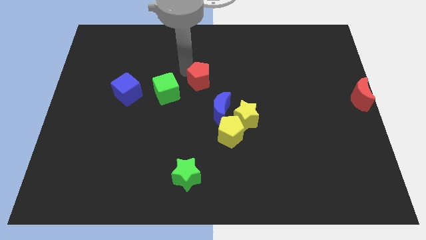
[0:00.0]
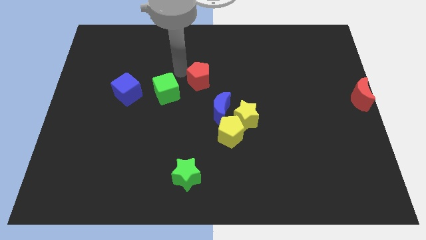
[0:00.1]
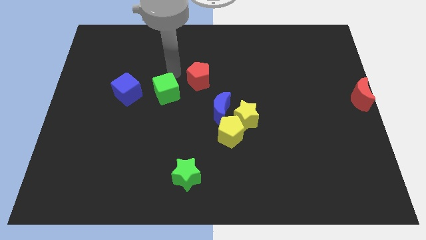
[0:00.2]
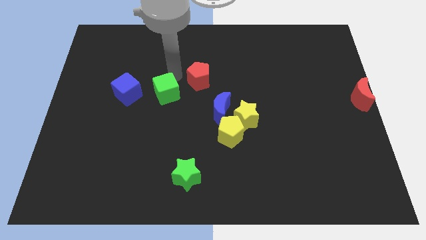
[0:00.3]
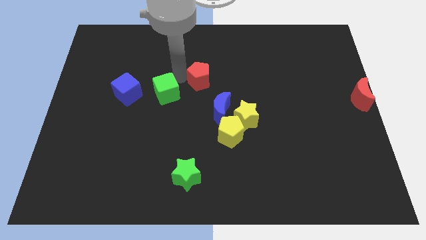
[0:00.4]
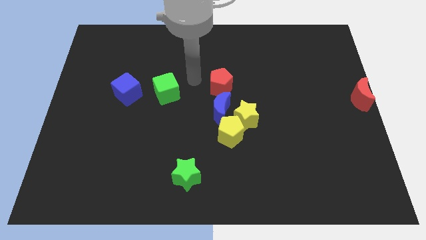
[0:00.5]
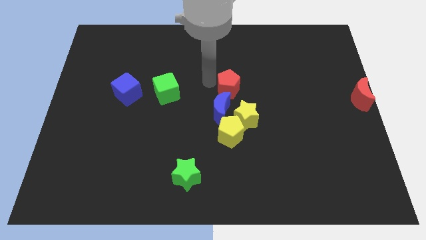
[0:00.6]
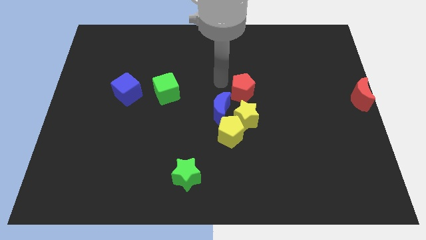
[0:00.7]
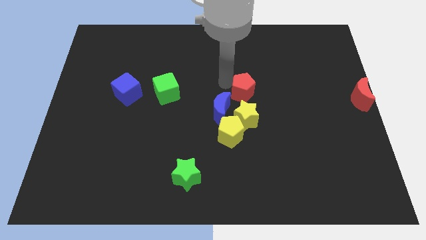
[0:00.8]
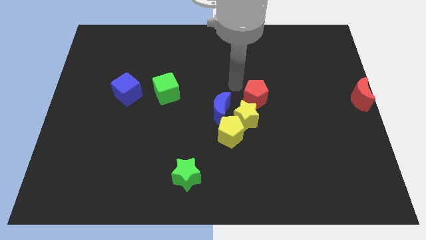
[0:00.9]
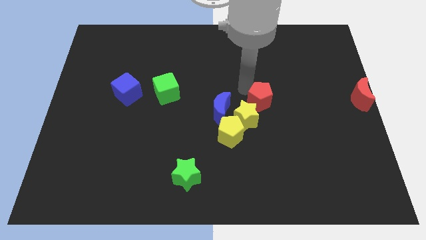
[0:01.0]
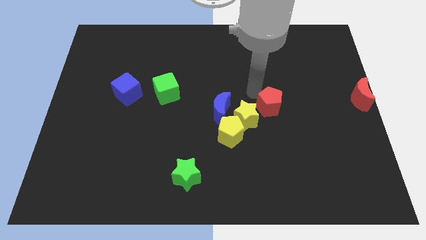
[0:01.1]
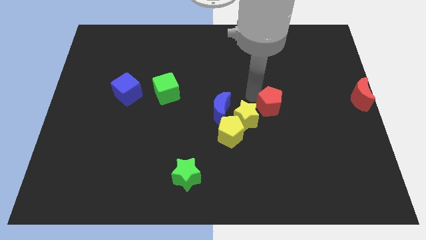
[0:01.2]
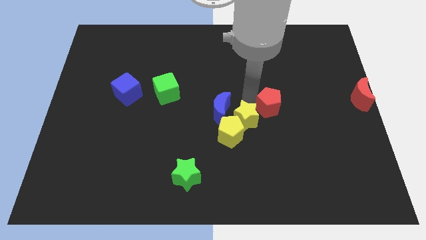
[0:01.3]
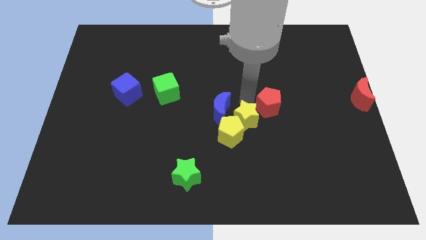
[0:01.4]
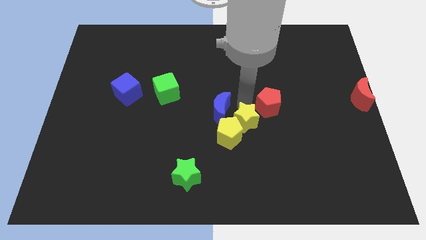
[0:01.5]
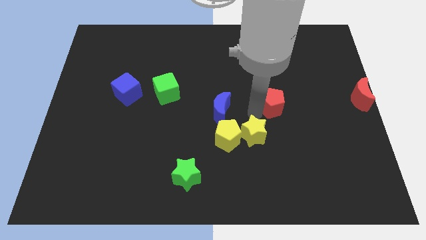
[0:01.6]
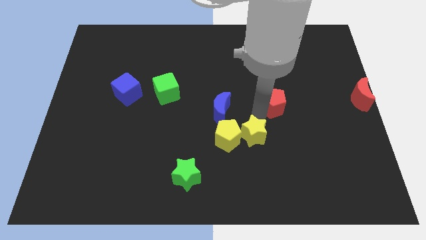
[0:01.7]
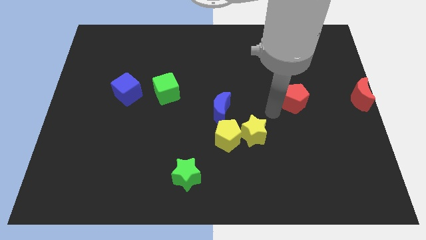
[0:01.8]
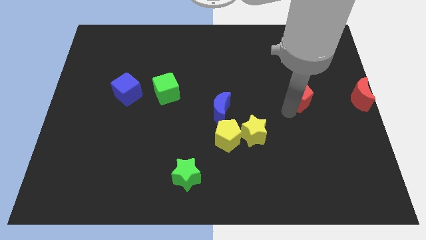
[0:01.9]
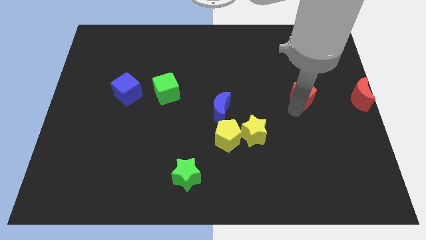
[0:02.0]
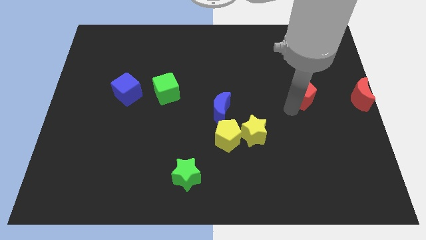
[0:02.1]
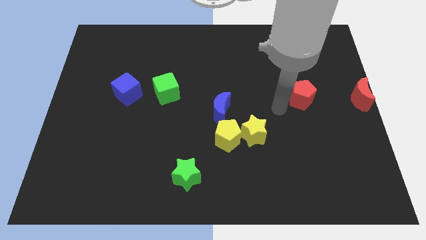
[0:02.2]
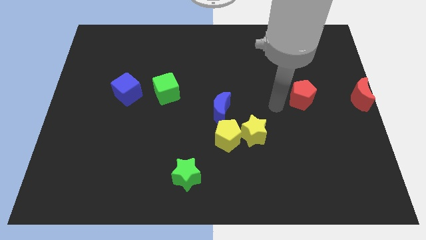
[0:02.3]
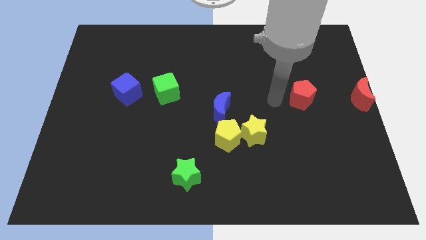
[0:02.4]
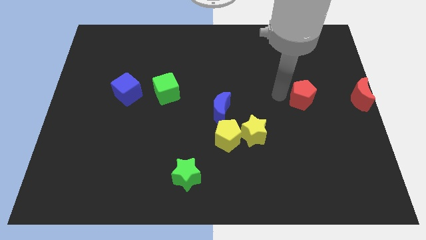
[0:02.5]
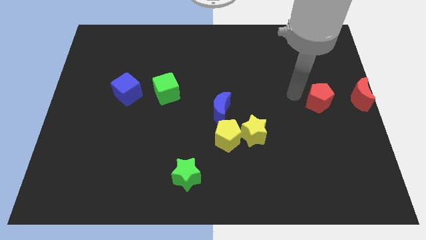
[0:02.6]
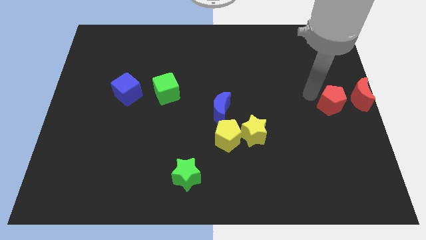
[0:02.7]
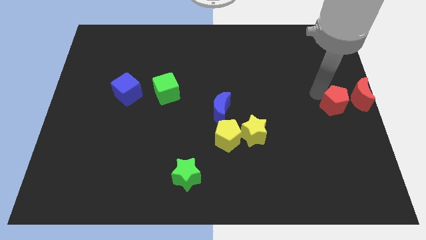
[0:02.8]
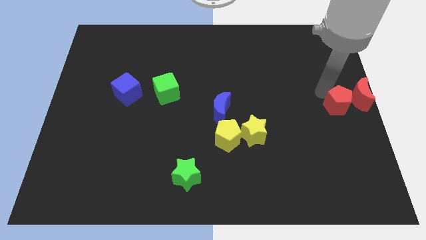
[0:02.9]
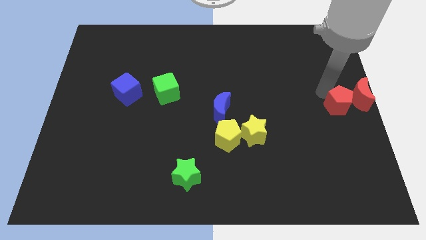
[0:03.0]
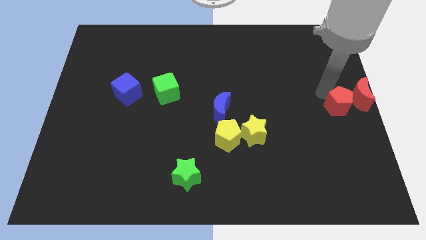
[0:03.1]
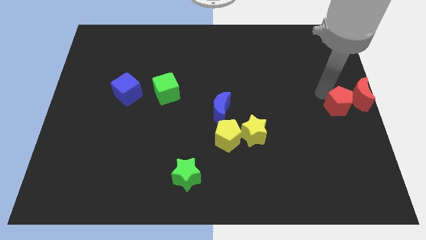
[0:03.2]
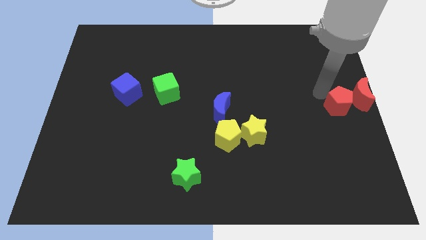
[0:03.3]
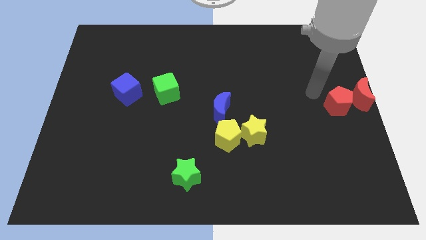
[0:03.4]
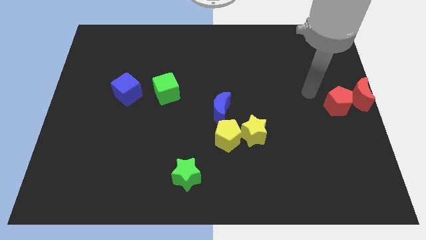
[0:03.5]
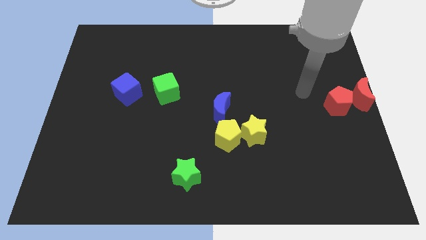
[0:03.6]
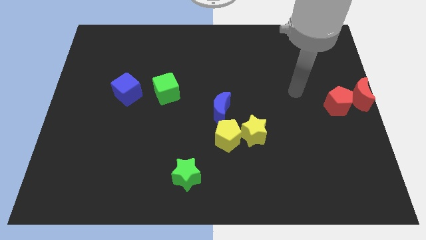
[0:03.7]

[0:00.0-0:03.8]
push the red pentagon towards the red crescent

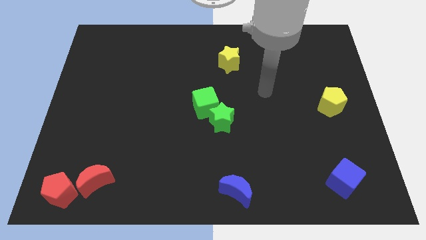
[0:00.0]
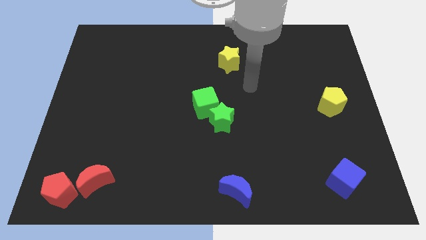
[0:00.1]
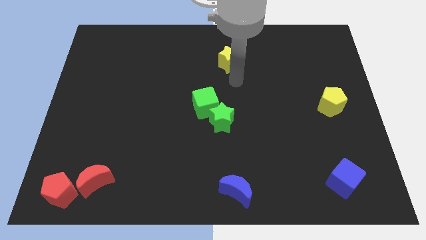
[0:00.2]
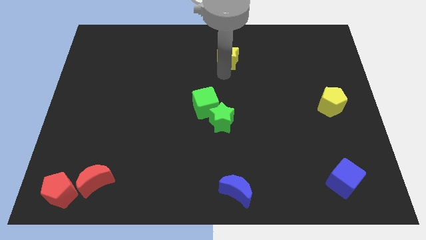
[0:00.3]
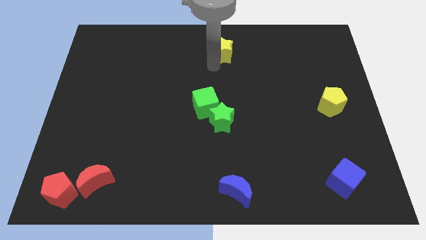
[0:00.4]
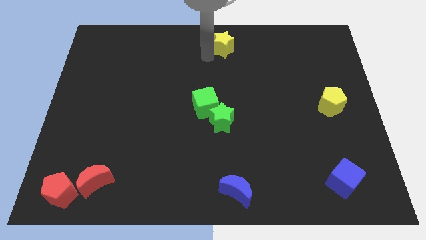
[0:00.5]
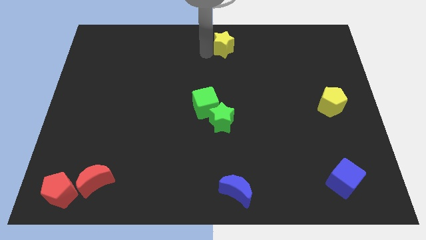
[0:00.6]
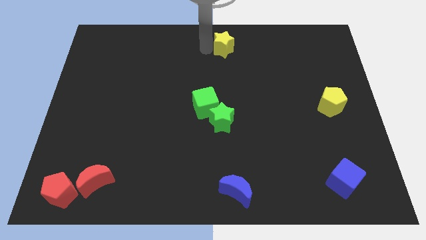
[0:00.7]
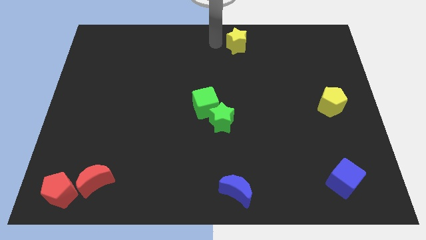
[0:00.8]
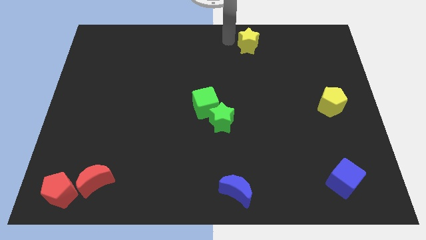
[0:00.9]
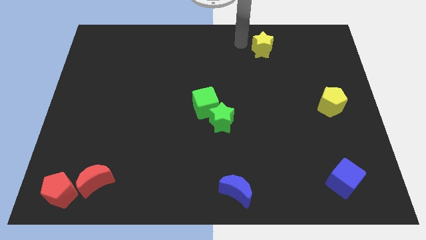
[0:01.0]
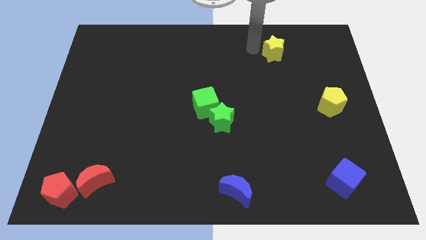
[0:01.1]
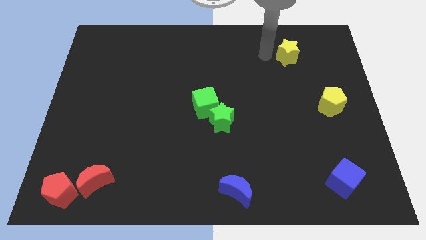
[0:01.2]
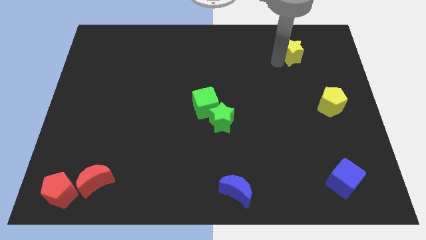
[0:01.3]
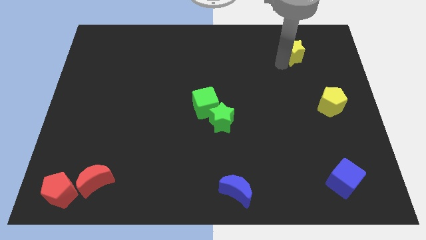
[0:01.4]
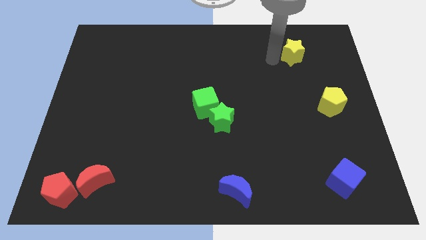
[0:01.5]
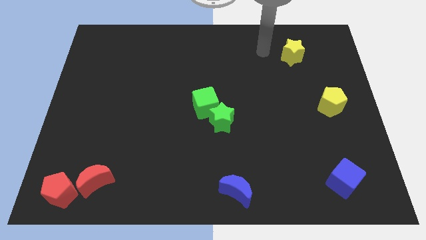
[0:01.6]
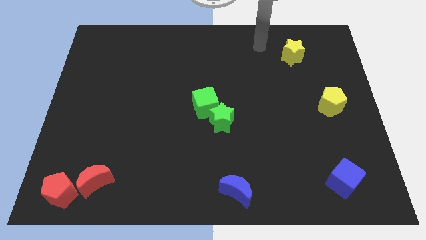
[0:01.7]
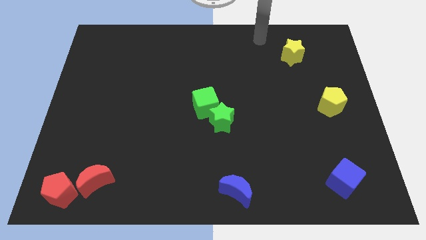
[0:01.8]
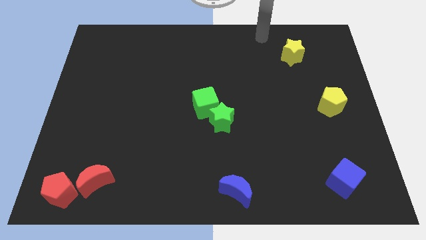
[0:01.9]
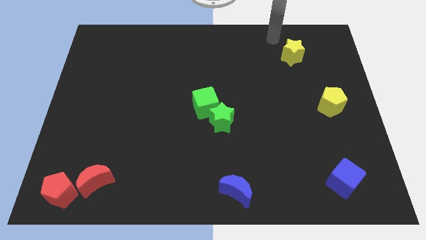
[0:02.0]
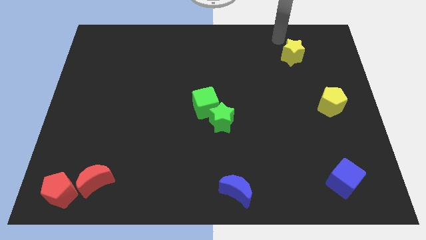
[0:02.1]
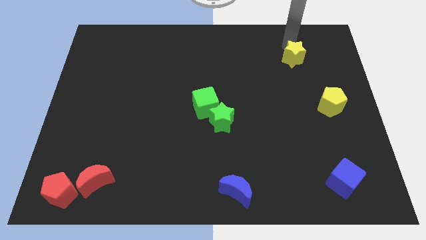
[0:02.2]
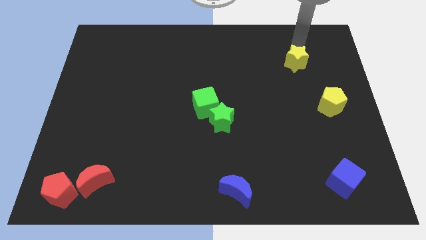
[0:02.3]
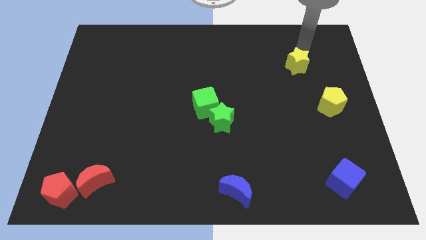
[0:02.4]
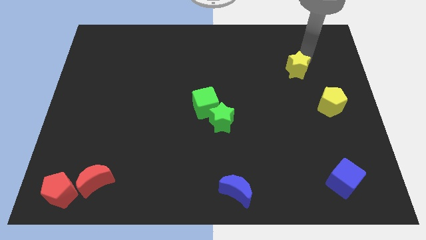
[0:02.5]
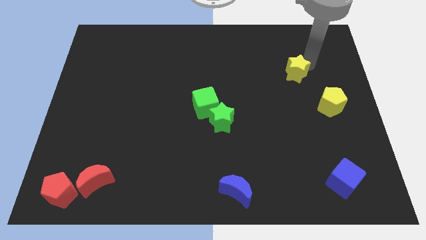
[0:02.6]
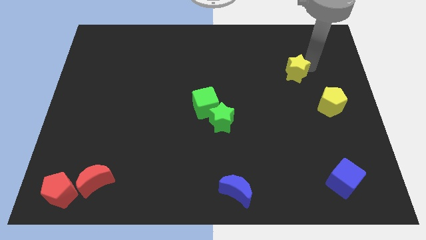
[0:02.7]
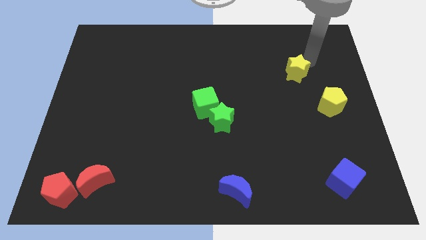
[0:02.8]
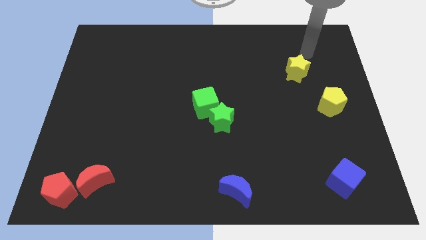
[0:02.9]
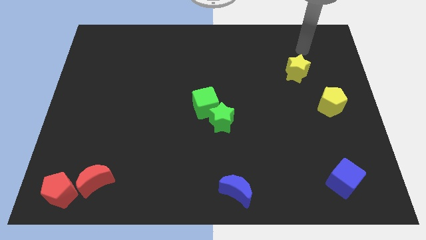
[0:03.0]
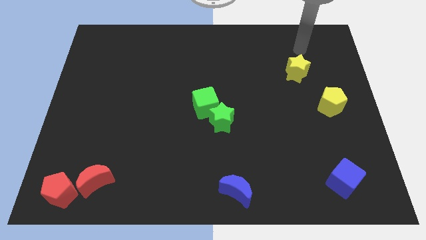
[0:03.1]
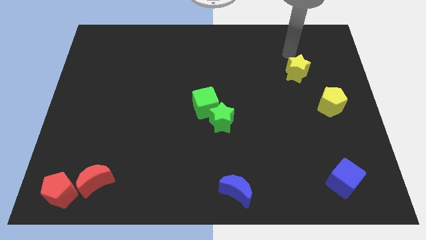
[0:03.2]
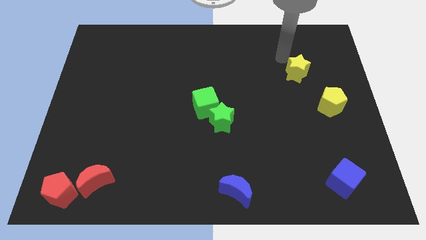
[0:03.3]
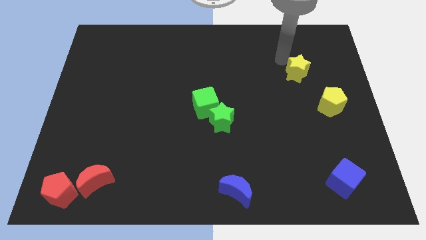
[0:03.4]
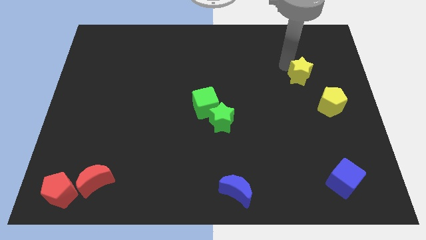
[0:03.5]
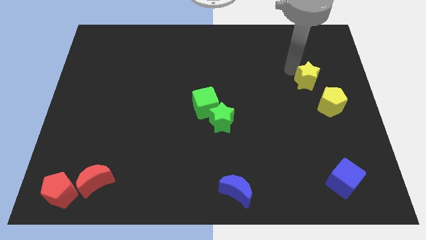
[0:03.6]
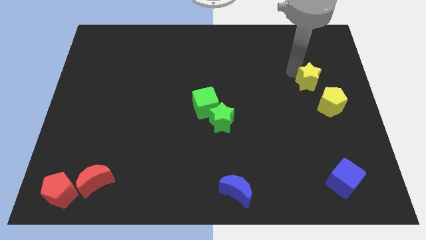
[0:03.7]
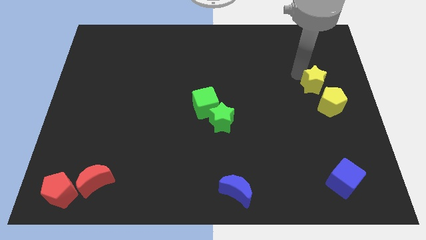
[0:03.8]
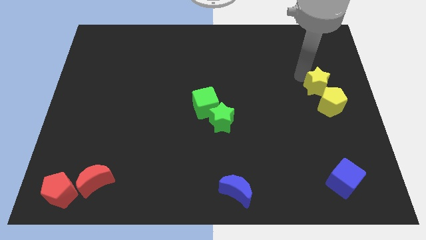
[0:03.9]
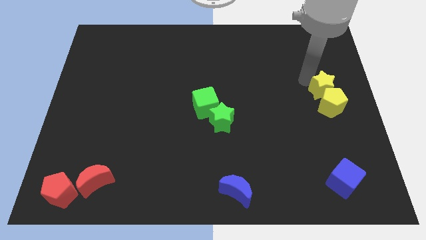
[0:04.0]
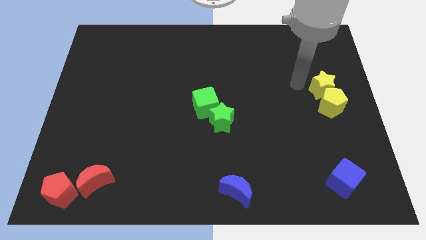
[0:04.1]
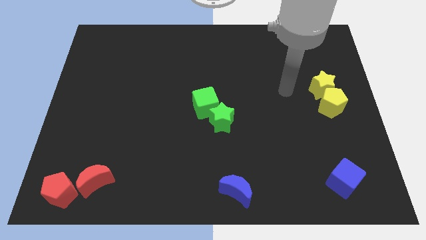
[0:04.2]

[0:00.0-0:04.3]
take the yellow star into the top side of the yellow pentagon

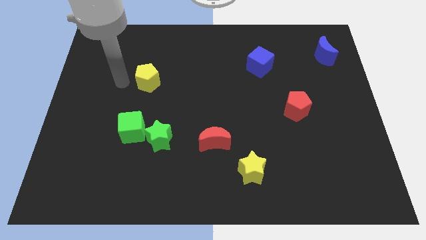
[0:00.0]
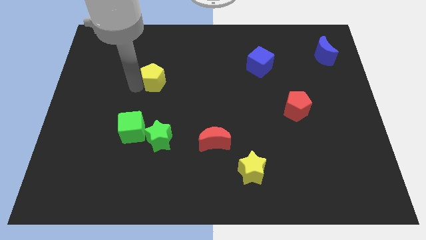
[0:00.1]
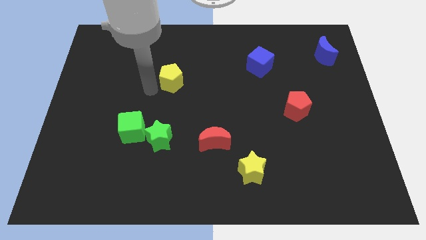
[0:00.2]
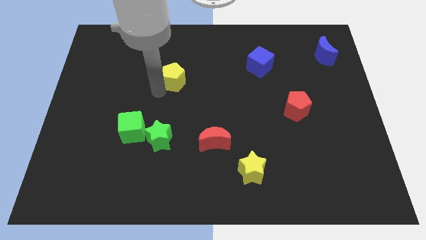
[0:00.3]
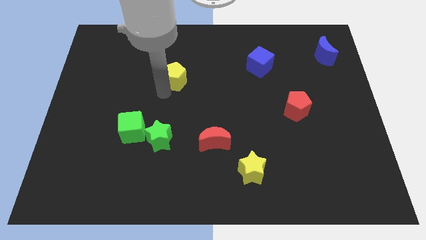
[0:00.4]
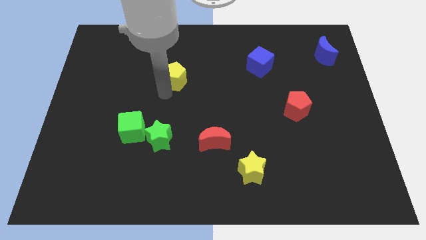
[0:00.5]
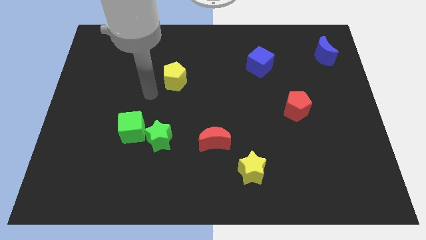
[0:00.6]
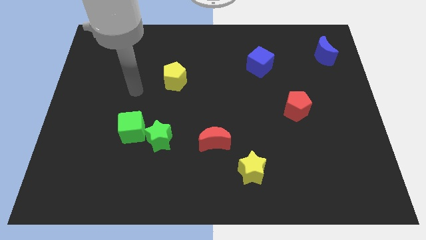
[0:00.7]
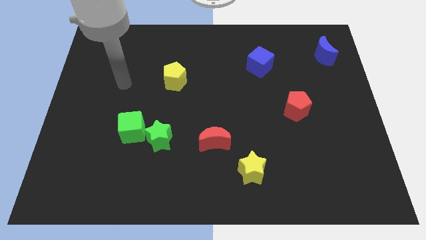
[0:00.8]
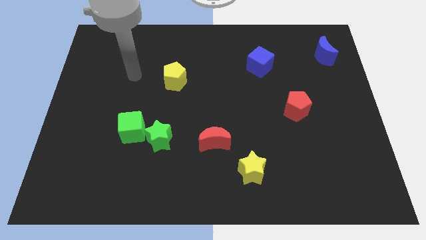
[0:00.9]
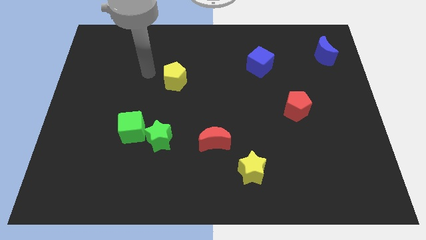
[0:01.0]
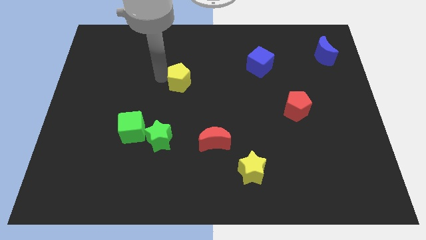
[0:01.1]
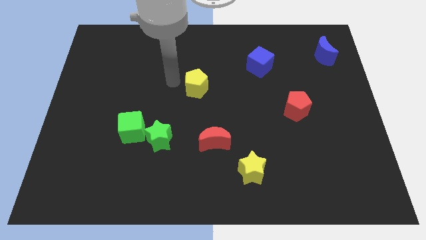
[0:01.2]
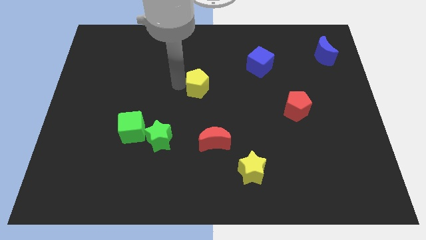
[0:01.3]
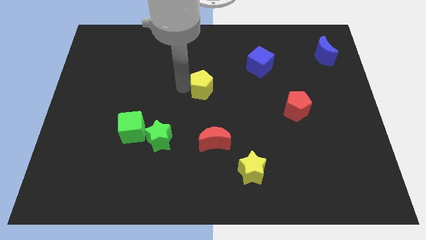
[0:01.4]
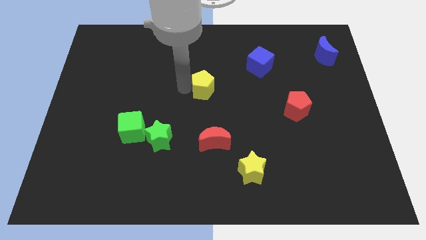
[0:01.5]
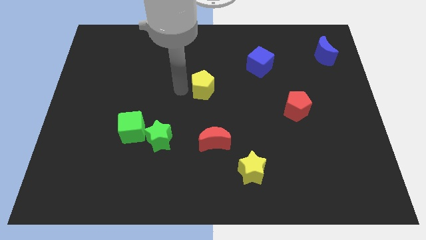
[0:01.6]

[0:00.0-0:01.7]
move the yellow pentagon to the center of the board
